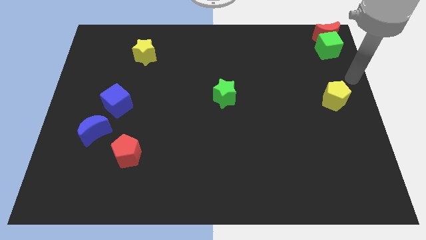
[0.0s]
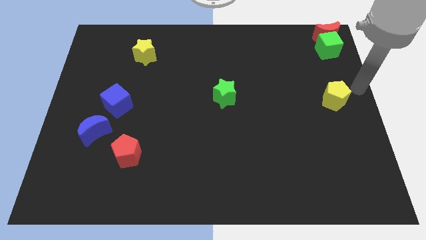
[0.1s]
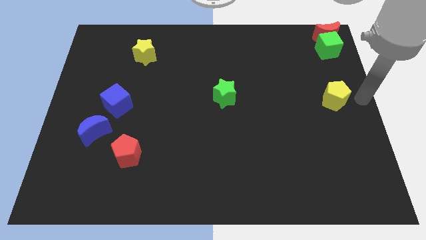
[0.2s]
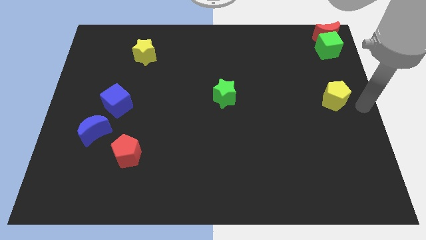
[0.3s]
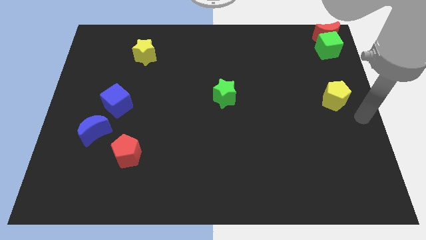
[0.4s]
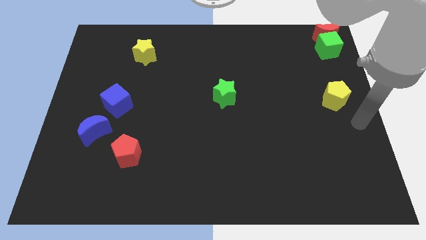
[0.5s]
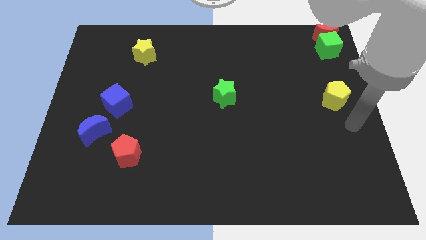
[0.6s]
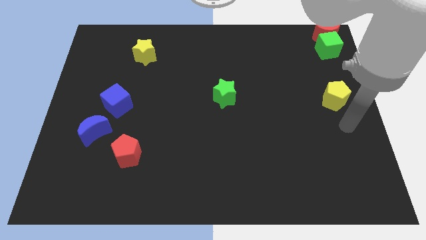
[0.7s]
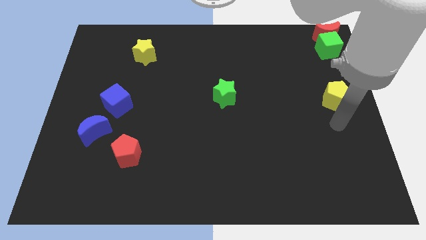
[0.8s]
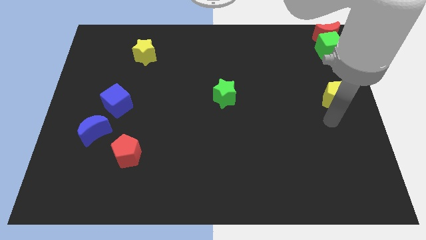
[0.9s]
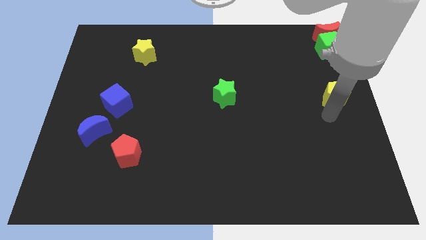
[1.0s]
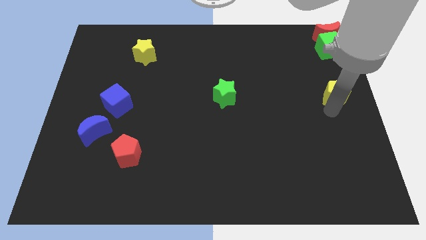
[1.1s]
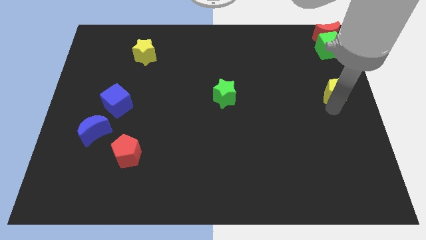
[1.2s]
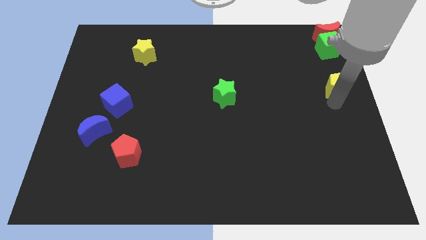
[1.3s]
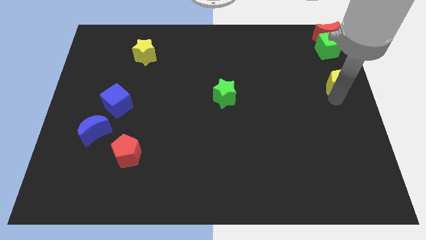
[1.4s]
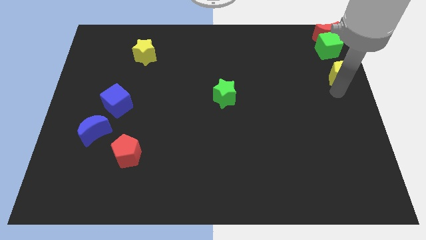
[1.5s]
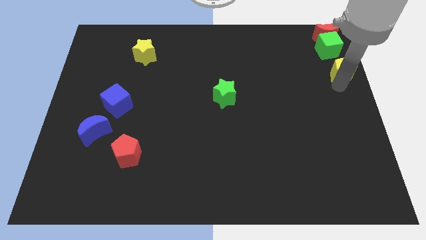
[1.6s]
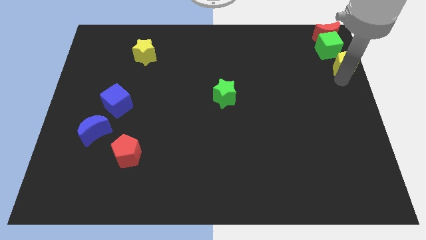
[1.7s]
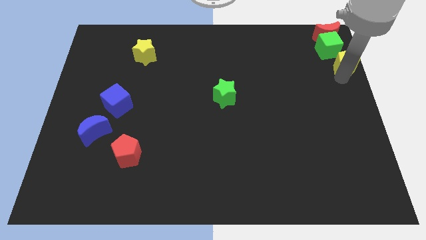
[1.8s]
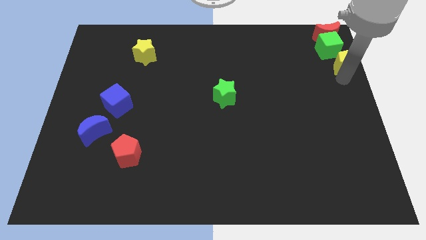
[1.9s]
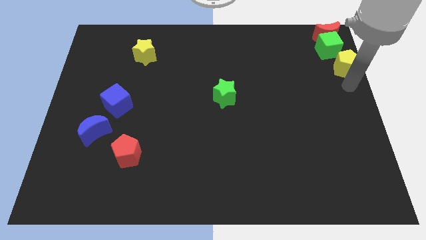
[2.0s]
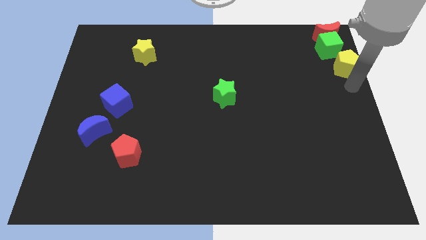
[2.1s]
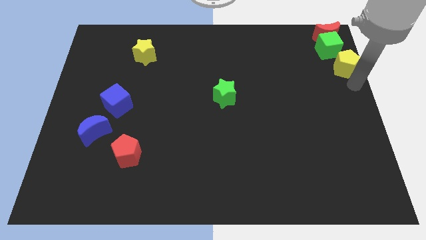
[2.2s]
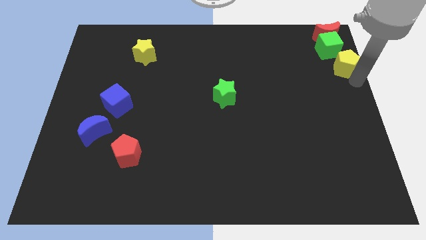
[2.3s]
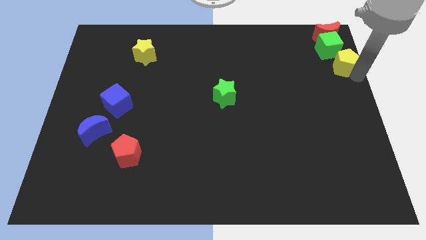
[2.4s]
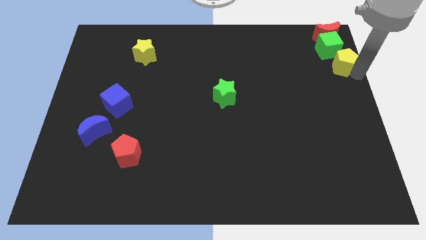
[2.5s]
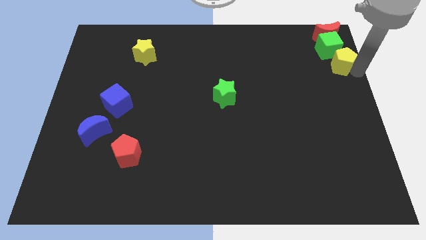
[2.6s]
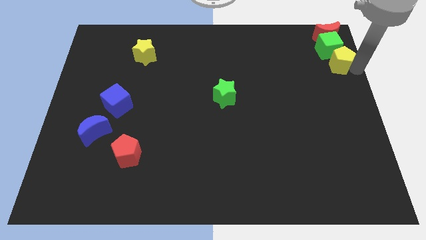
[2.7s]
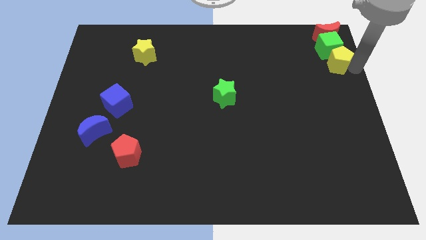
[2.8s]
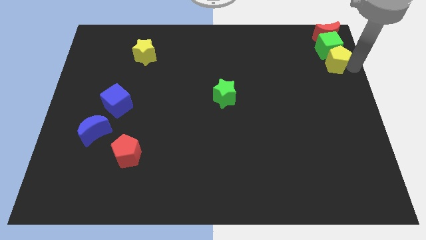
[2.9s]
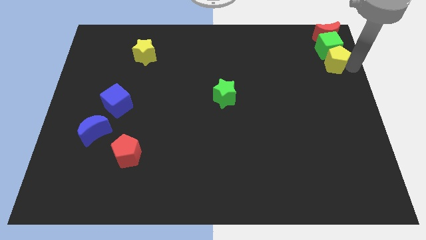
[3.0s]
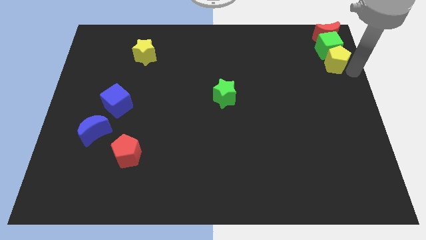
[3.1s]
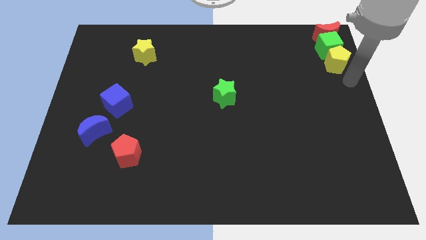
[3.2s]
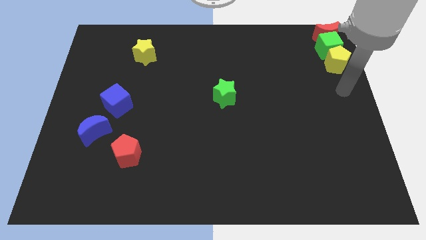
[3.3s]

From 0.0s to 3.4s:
place the yellow pentagon below the green cube

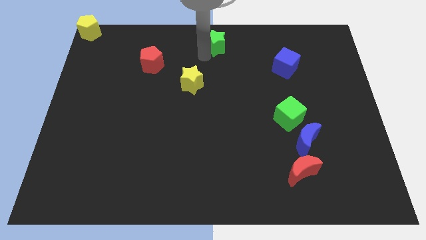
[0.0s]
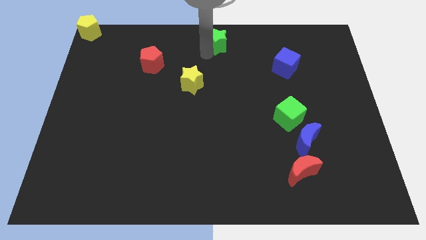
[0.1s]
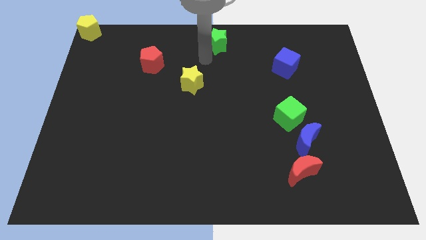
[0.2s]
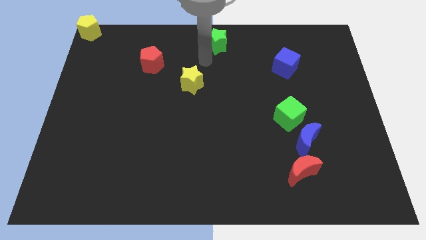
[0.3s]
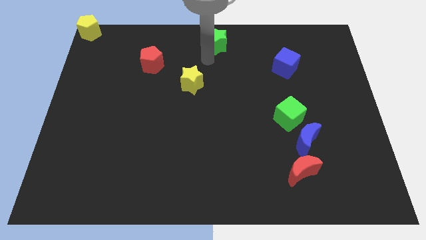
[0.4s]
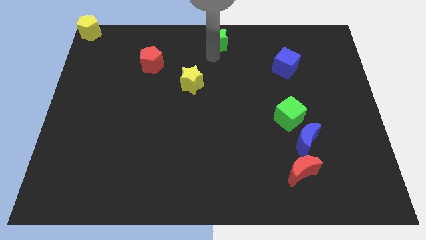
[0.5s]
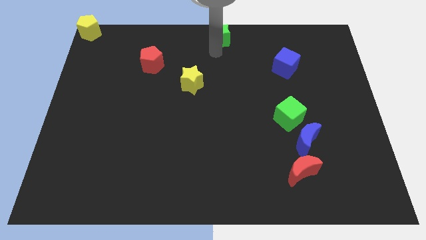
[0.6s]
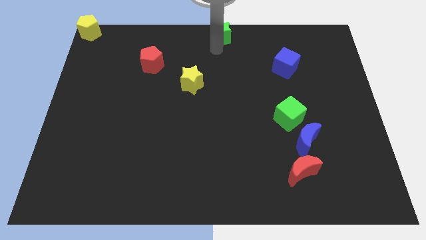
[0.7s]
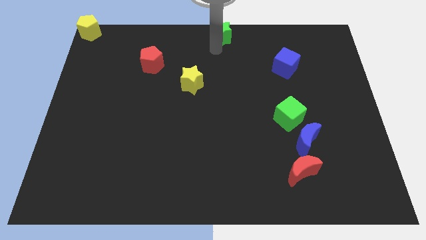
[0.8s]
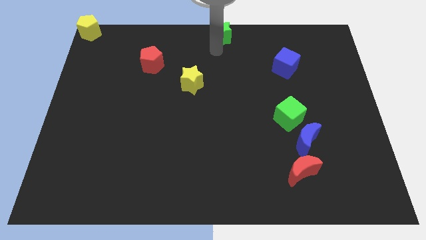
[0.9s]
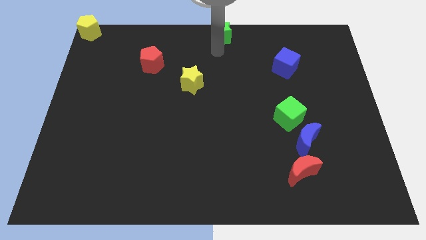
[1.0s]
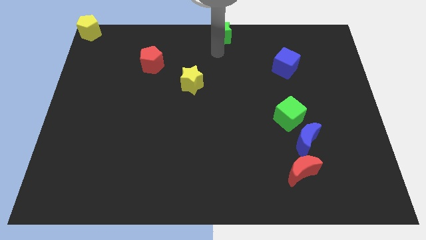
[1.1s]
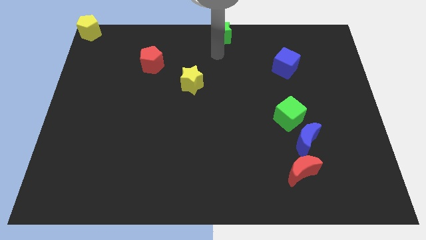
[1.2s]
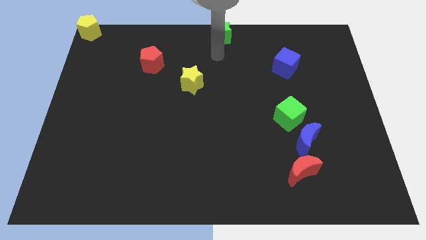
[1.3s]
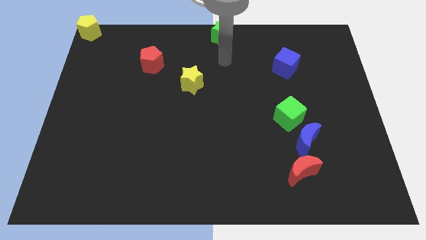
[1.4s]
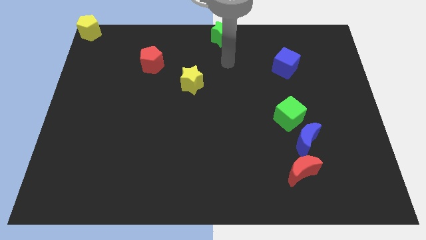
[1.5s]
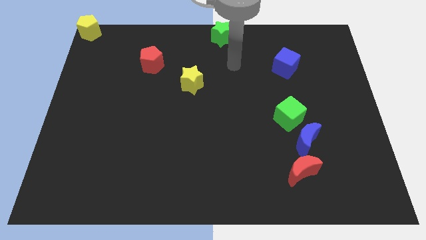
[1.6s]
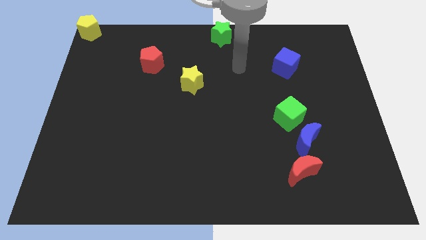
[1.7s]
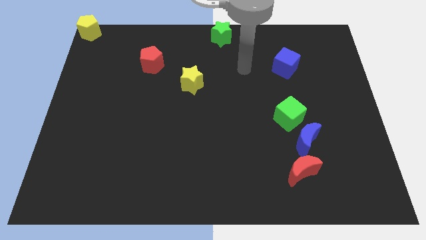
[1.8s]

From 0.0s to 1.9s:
put the green star at the top center

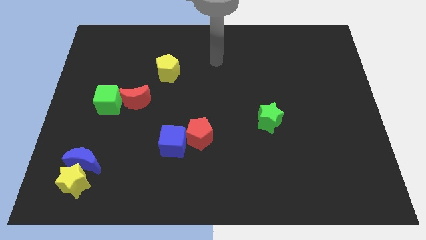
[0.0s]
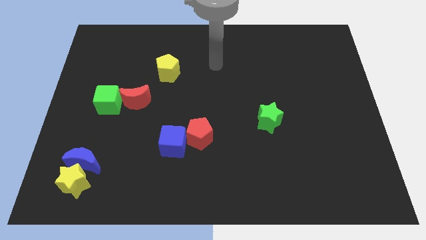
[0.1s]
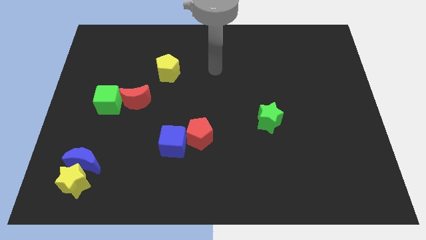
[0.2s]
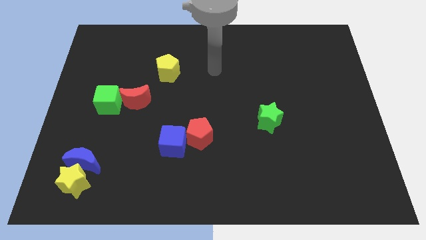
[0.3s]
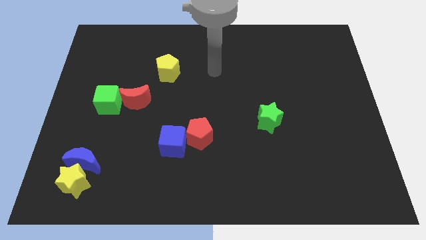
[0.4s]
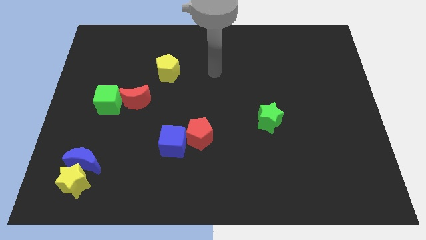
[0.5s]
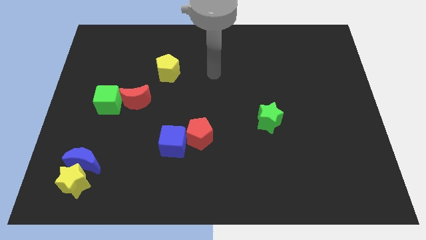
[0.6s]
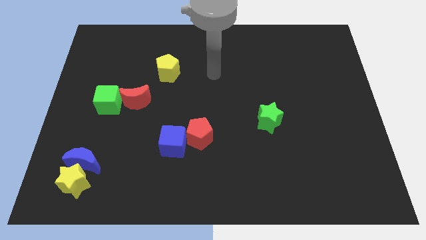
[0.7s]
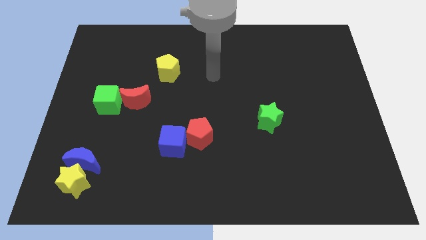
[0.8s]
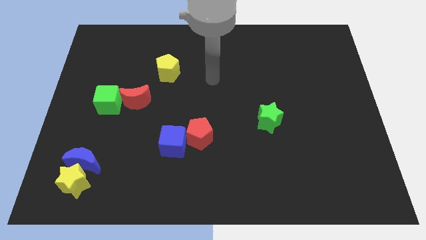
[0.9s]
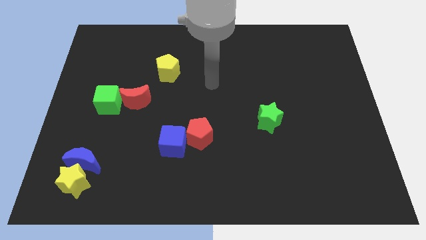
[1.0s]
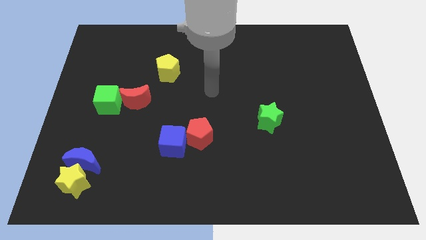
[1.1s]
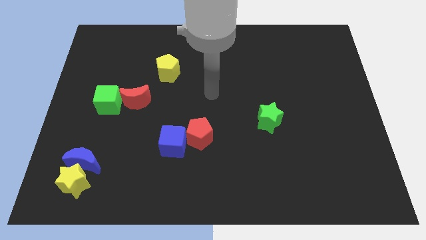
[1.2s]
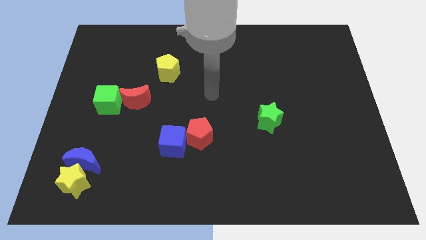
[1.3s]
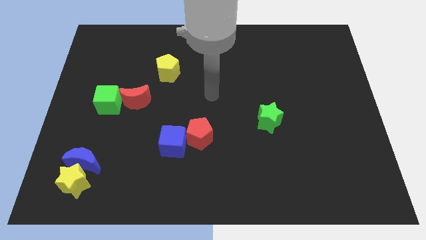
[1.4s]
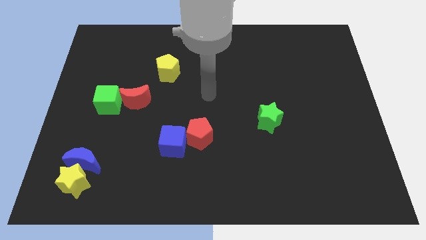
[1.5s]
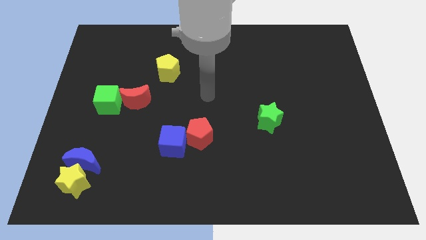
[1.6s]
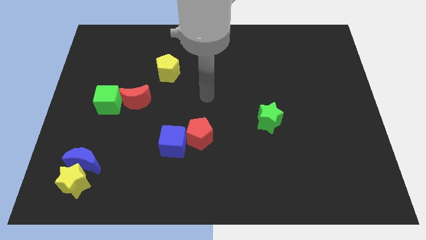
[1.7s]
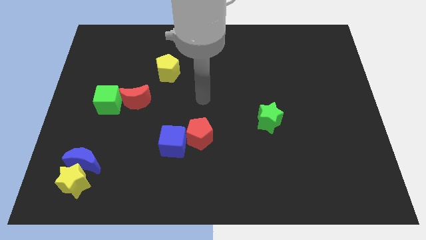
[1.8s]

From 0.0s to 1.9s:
move the arm towards the center of the board

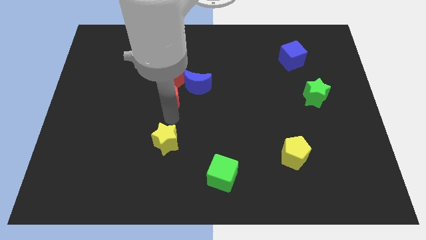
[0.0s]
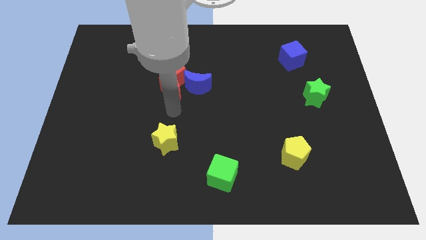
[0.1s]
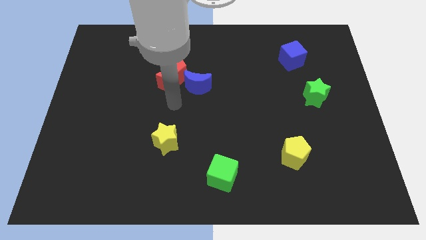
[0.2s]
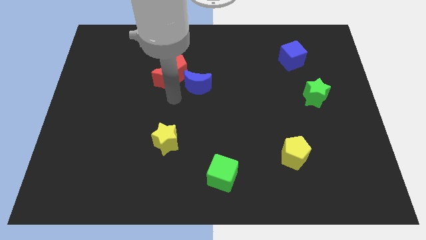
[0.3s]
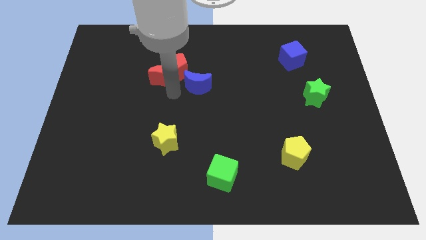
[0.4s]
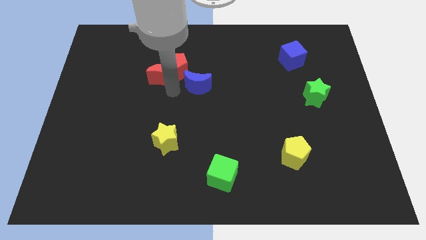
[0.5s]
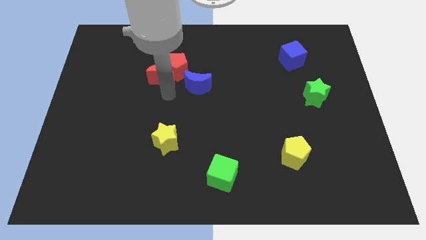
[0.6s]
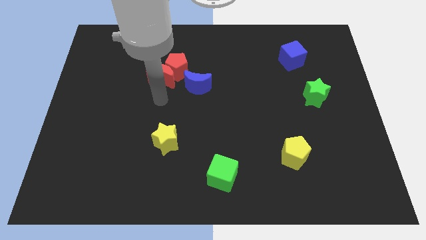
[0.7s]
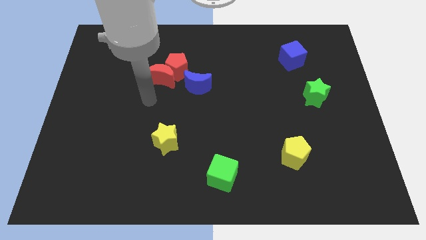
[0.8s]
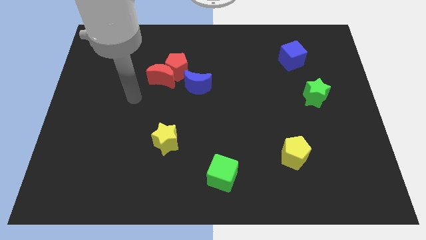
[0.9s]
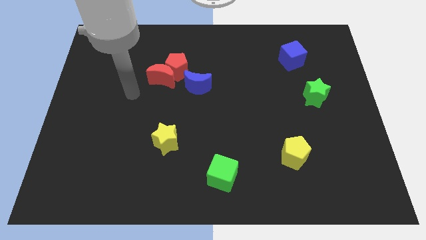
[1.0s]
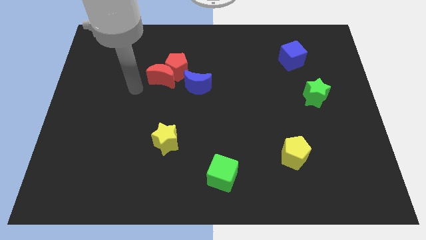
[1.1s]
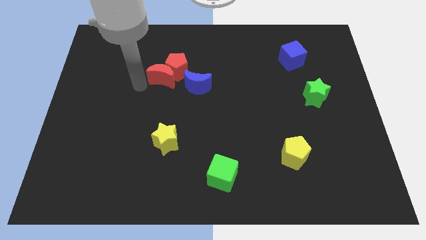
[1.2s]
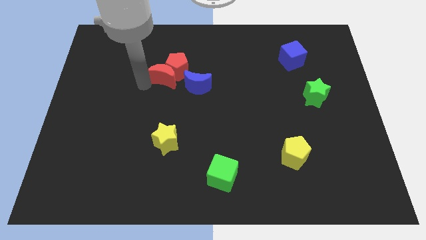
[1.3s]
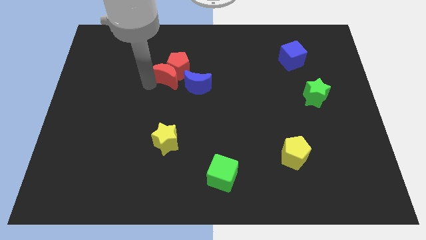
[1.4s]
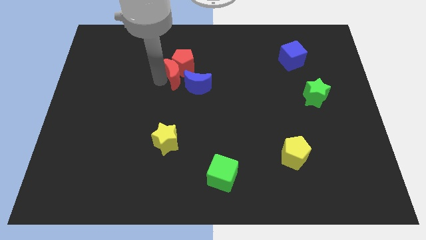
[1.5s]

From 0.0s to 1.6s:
place the red moon close to the red pentagon
